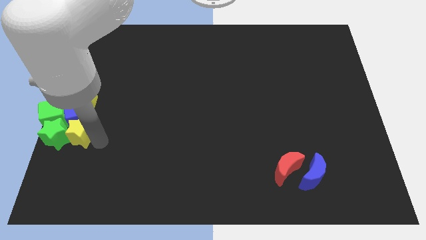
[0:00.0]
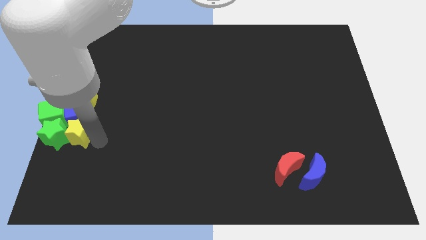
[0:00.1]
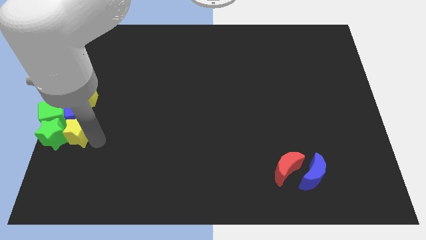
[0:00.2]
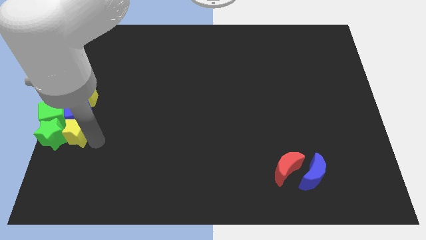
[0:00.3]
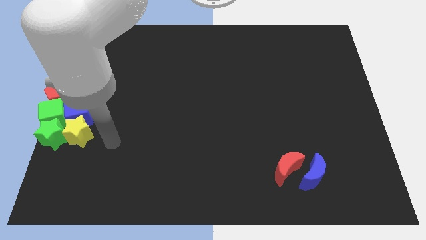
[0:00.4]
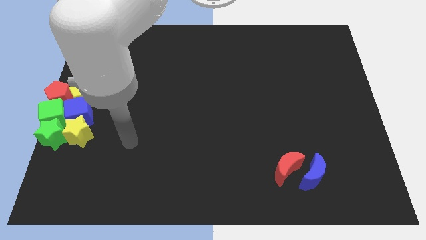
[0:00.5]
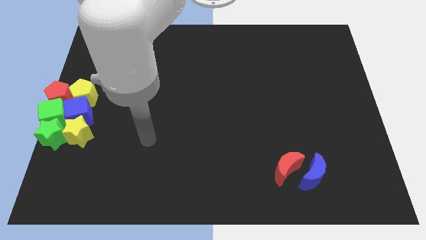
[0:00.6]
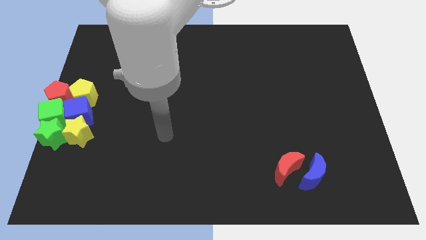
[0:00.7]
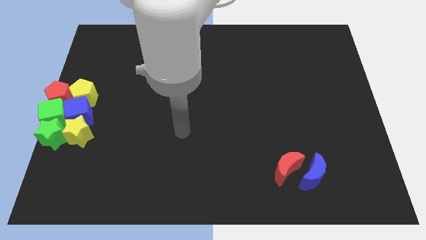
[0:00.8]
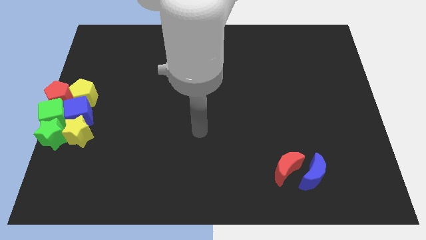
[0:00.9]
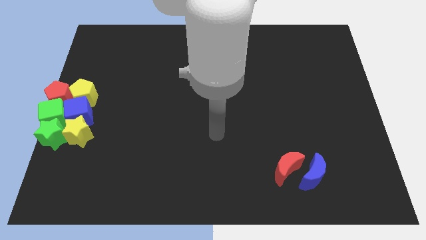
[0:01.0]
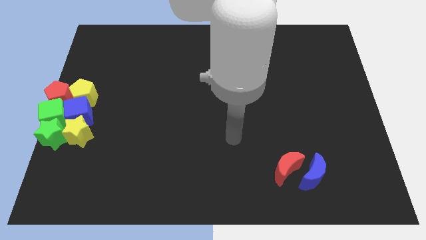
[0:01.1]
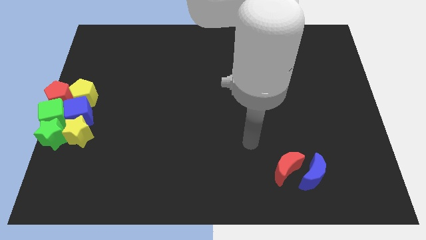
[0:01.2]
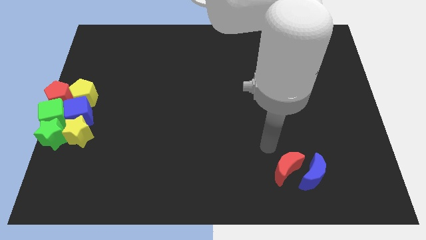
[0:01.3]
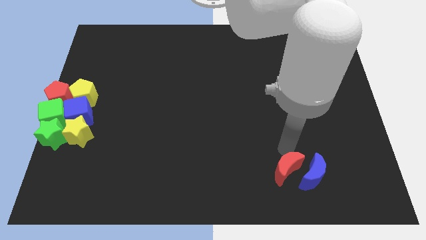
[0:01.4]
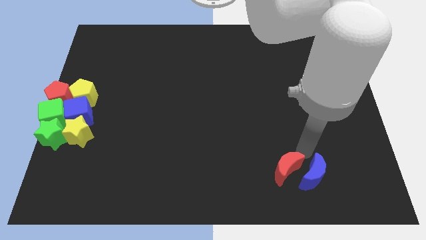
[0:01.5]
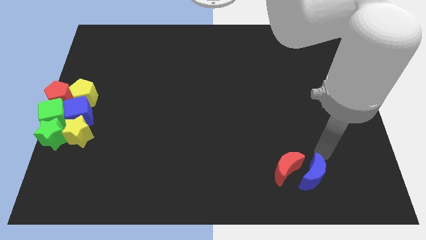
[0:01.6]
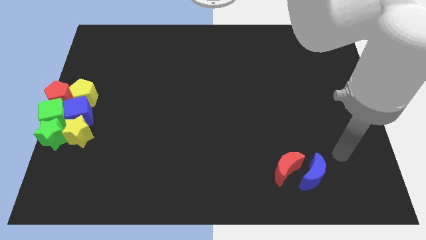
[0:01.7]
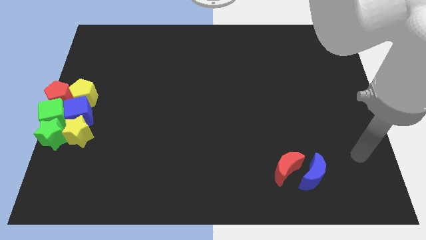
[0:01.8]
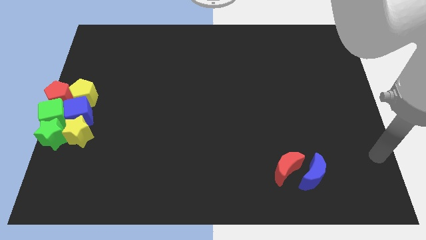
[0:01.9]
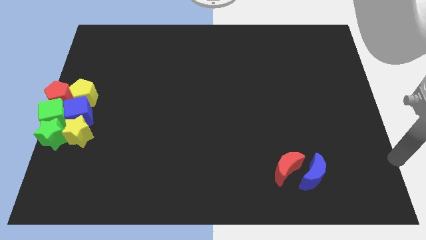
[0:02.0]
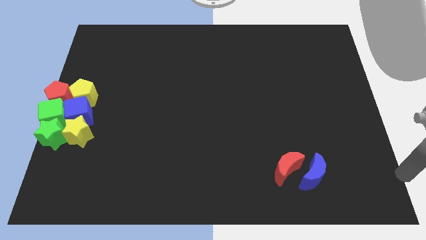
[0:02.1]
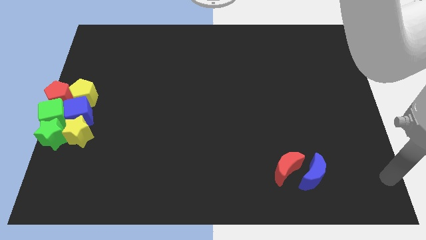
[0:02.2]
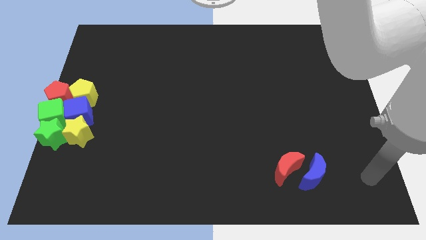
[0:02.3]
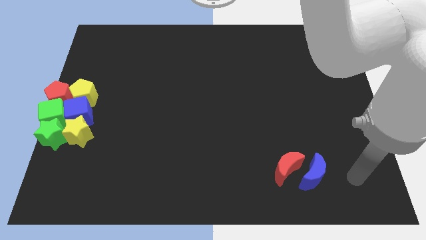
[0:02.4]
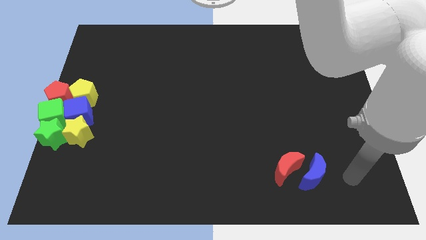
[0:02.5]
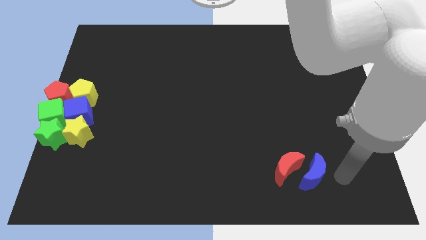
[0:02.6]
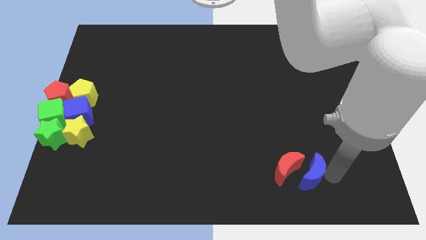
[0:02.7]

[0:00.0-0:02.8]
move your arm to the right of blue moon

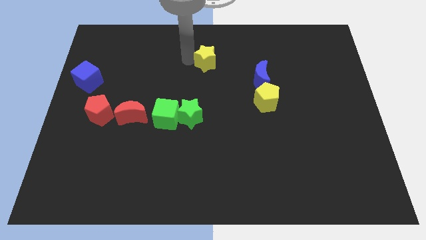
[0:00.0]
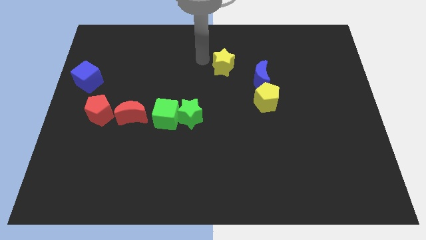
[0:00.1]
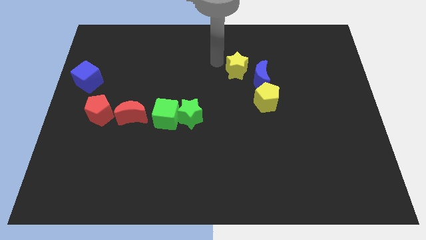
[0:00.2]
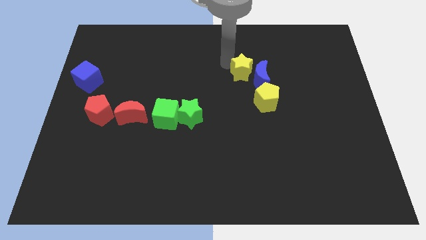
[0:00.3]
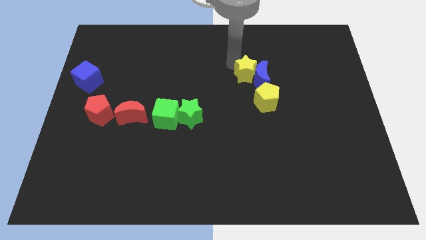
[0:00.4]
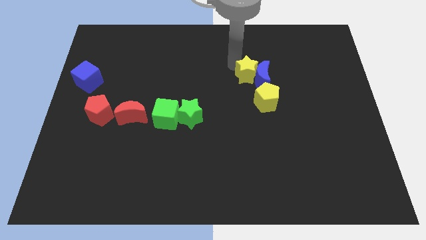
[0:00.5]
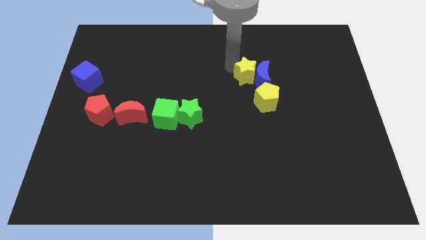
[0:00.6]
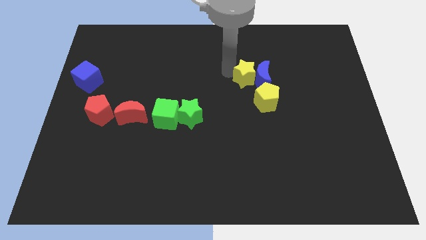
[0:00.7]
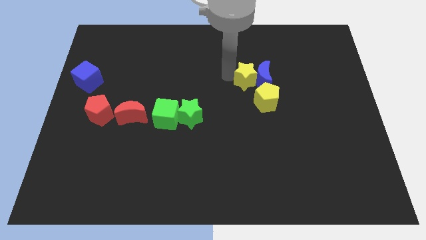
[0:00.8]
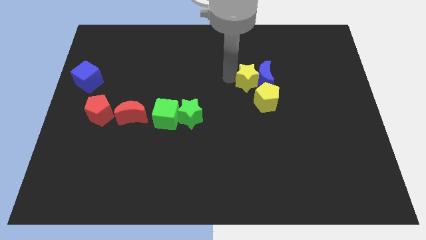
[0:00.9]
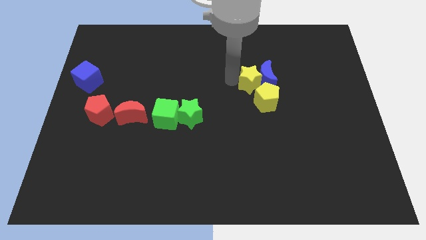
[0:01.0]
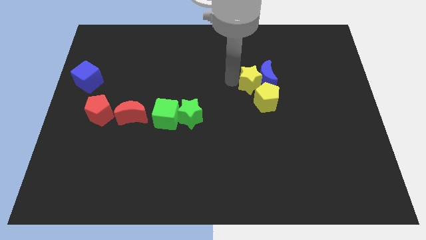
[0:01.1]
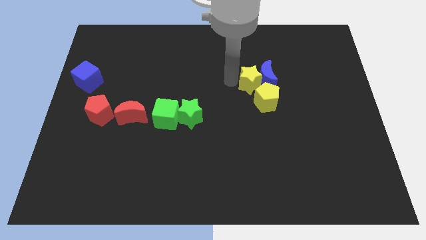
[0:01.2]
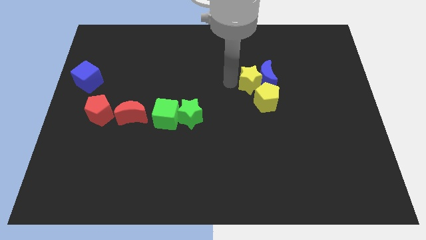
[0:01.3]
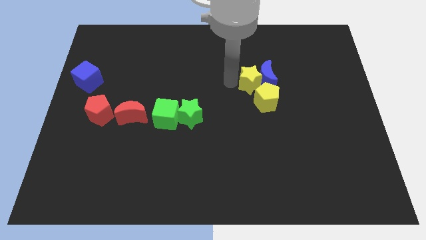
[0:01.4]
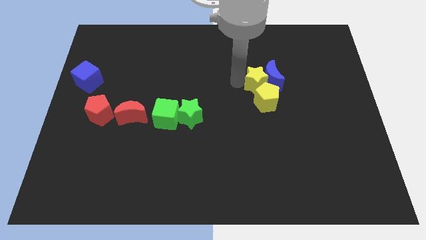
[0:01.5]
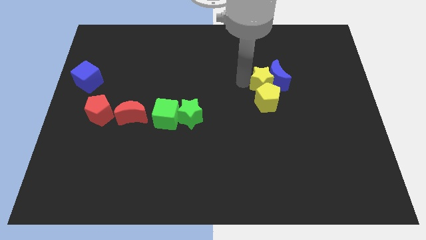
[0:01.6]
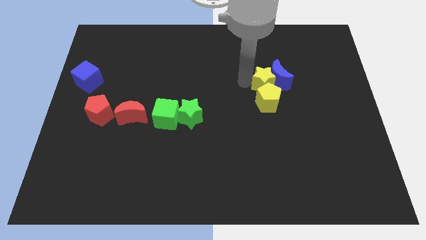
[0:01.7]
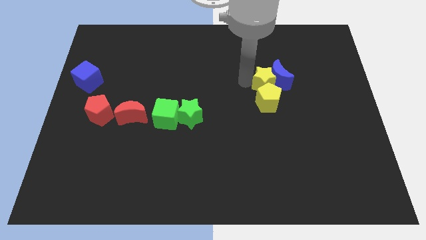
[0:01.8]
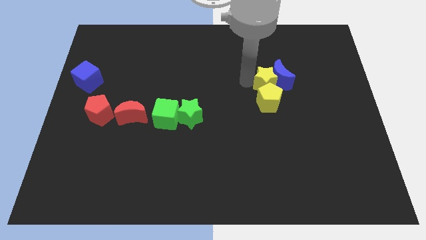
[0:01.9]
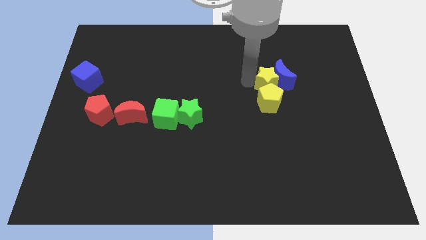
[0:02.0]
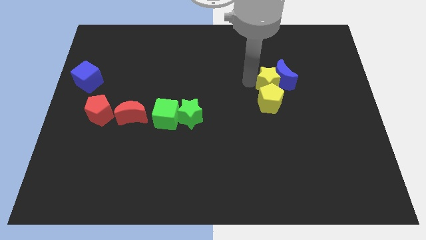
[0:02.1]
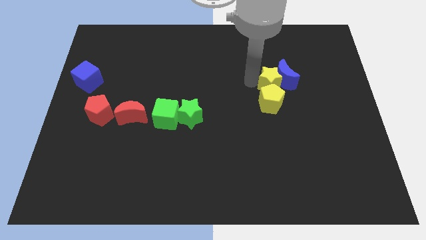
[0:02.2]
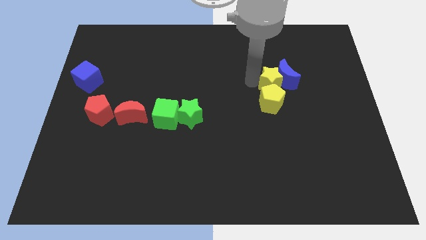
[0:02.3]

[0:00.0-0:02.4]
push yellow star above yellow pentagon

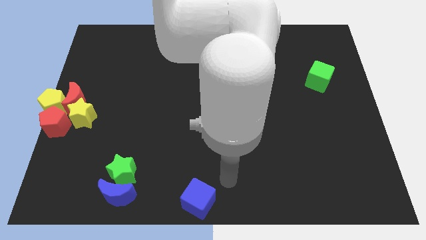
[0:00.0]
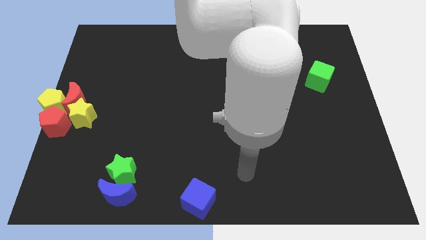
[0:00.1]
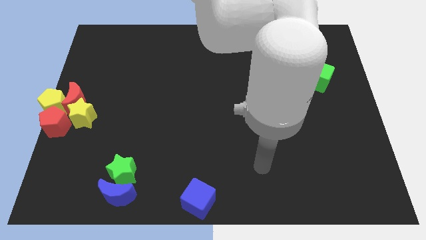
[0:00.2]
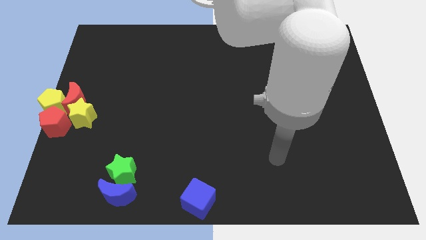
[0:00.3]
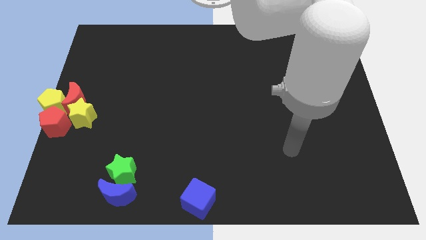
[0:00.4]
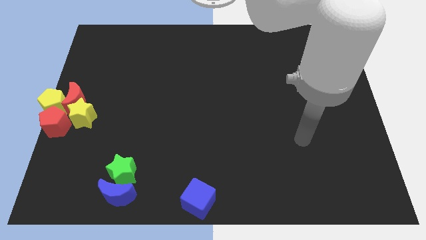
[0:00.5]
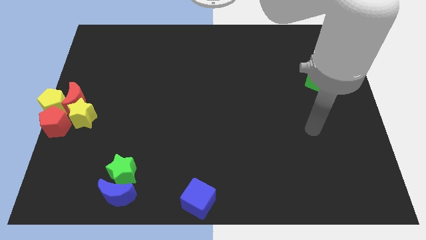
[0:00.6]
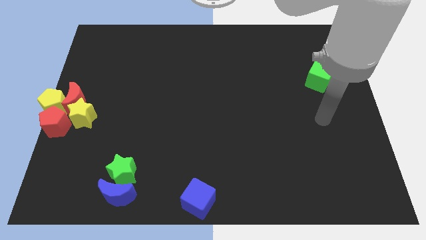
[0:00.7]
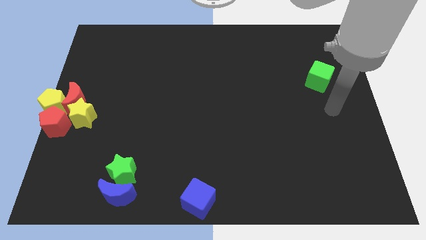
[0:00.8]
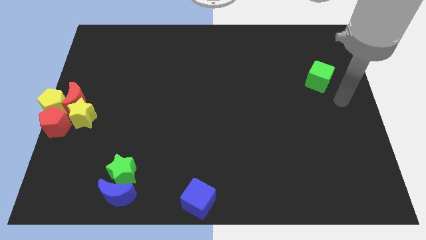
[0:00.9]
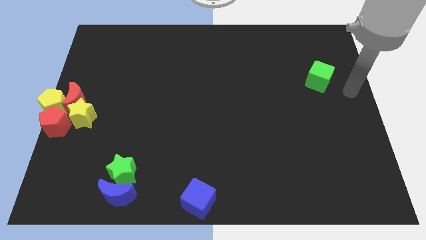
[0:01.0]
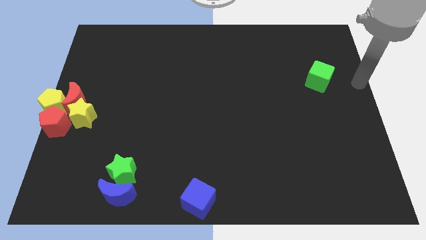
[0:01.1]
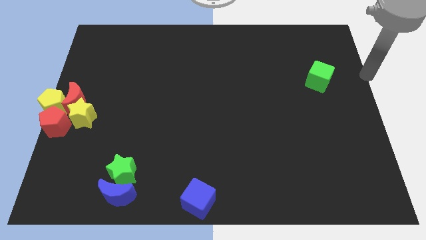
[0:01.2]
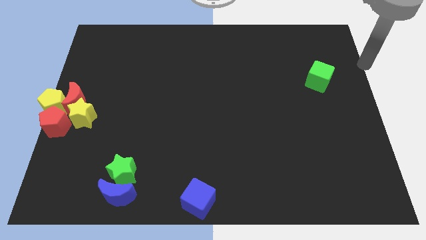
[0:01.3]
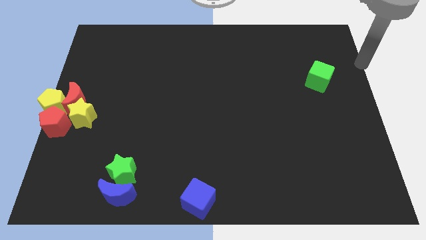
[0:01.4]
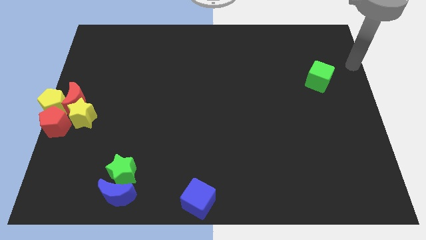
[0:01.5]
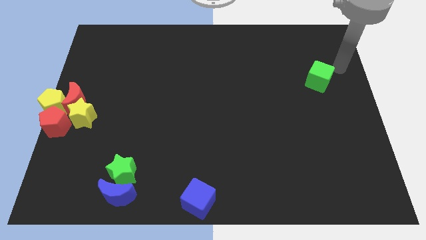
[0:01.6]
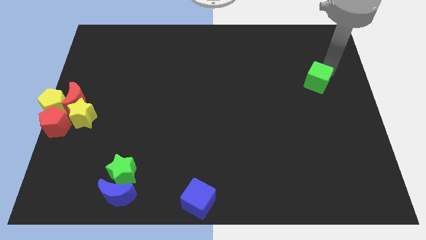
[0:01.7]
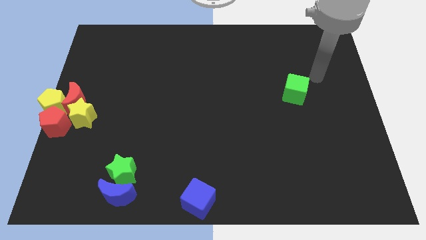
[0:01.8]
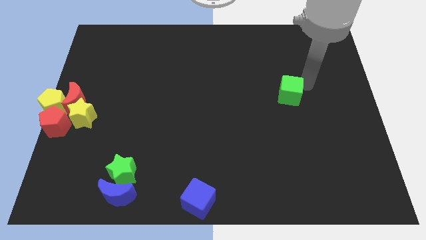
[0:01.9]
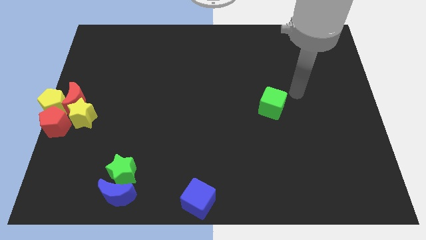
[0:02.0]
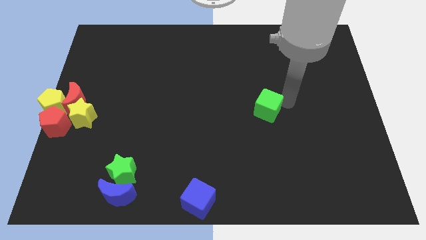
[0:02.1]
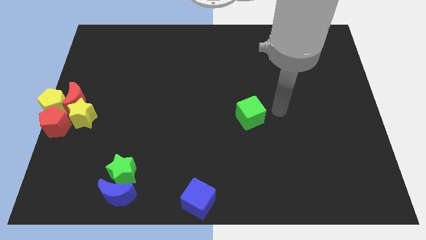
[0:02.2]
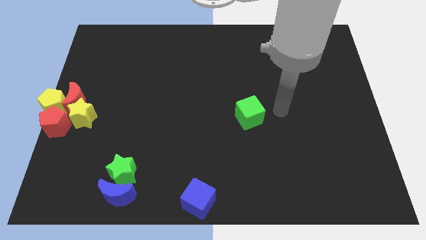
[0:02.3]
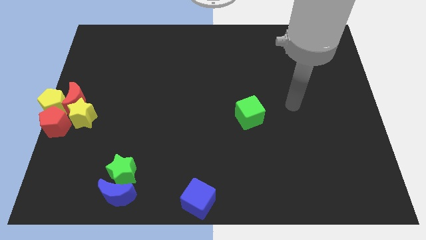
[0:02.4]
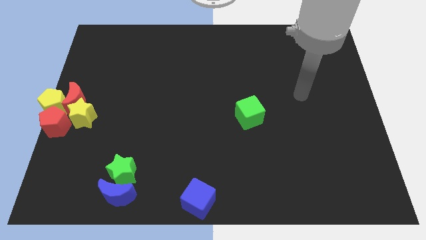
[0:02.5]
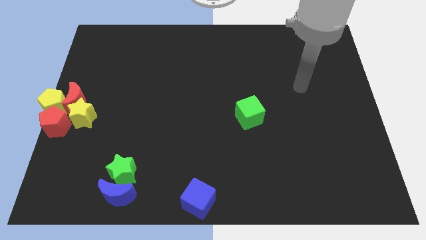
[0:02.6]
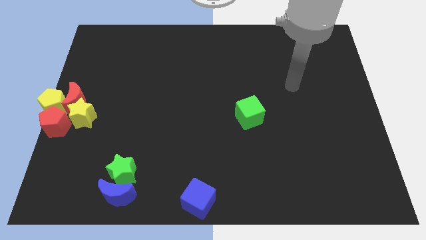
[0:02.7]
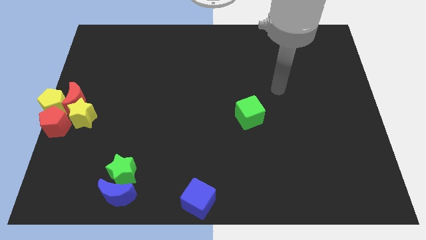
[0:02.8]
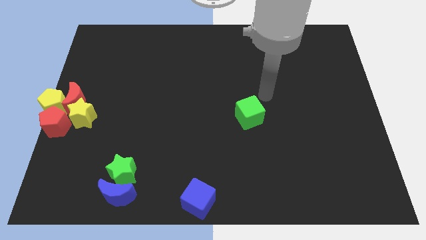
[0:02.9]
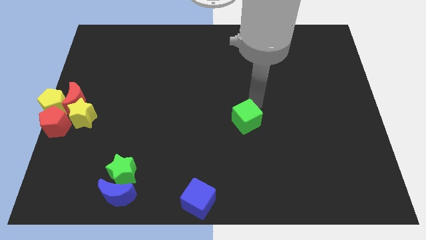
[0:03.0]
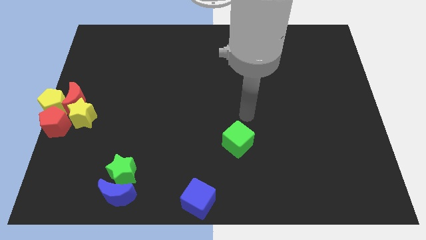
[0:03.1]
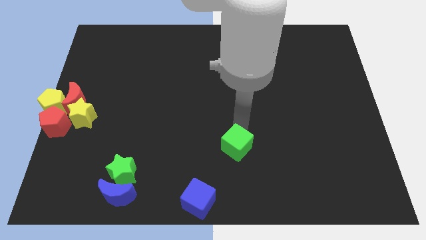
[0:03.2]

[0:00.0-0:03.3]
move the green cube towards the top side of the blue cube

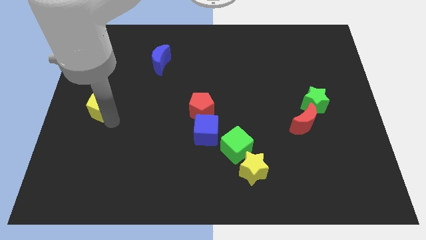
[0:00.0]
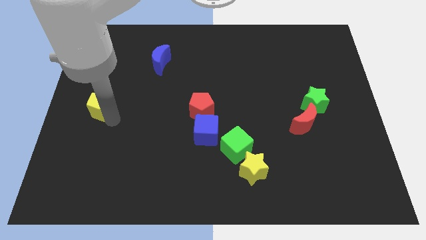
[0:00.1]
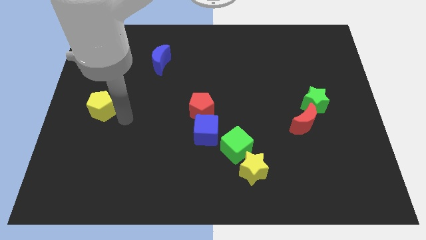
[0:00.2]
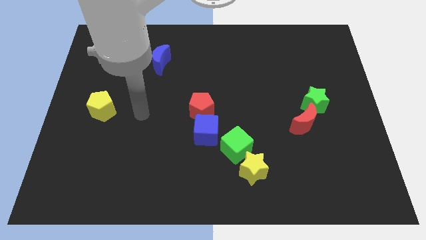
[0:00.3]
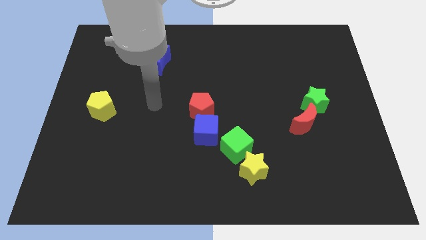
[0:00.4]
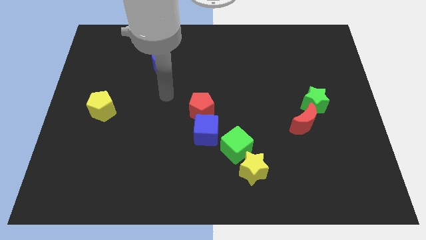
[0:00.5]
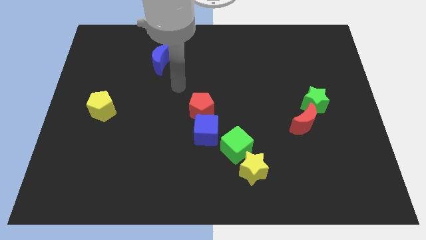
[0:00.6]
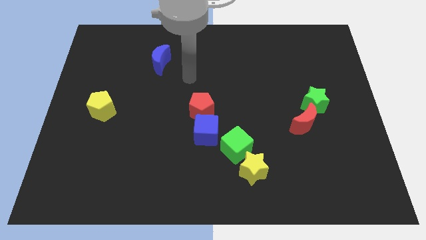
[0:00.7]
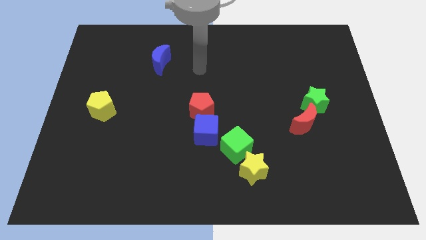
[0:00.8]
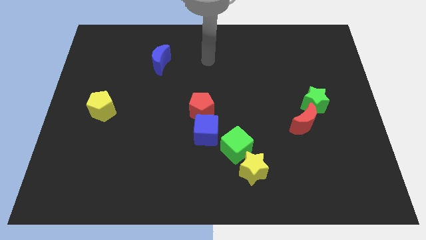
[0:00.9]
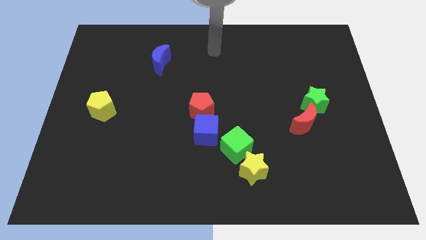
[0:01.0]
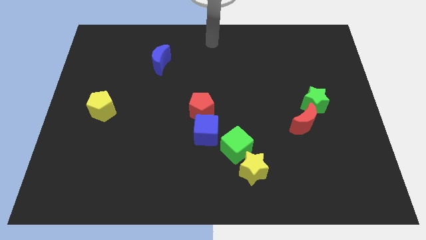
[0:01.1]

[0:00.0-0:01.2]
move your arm towards the top center of the board
